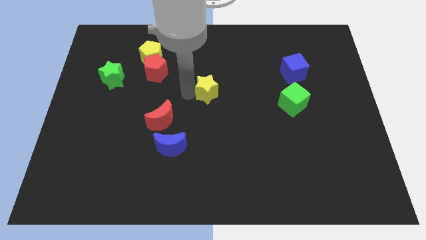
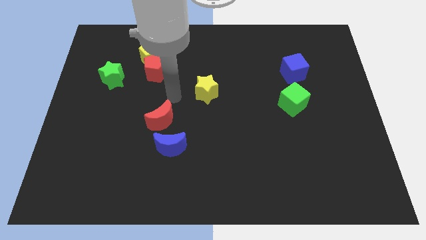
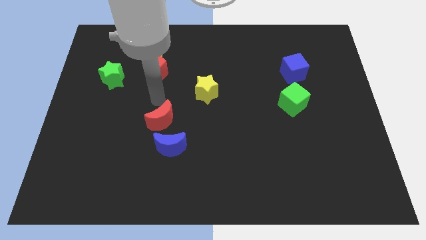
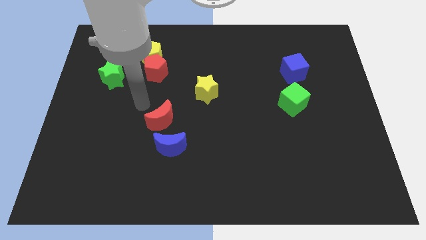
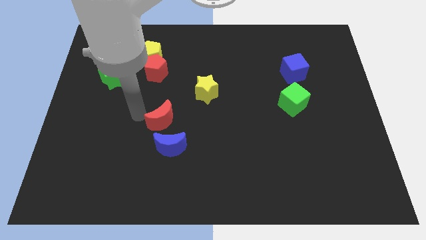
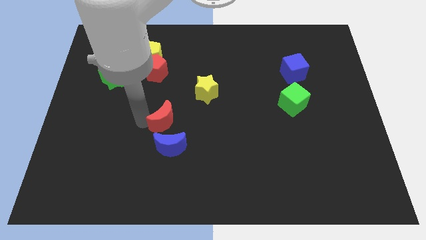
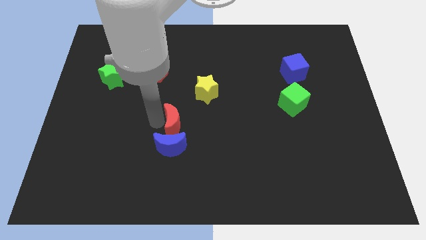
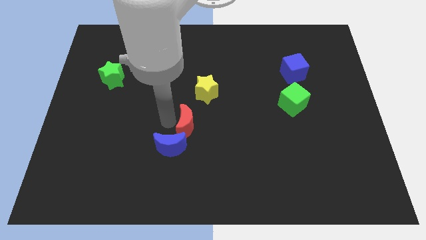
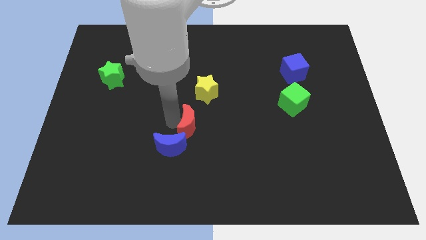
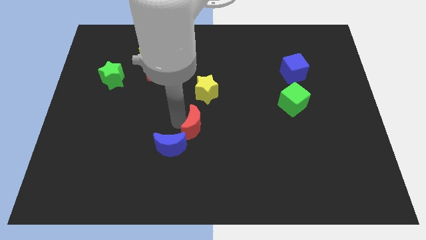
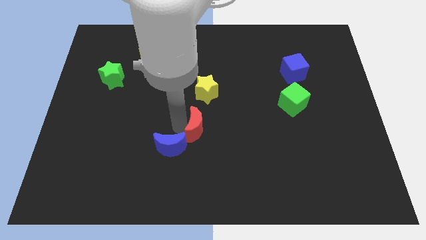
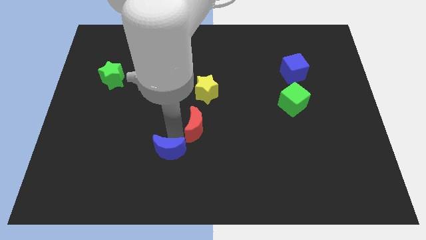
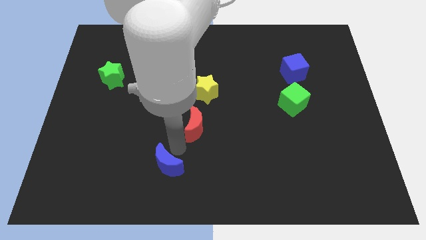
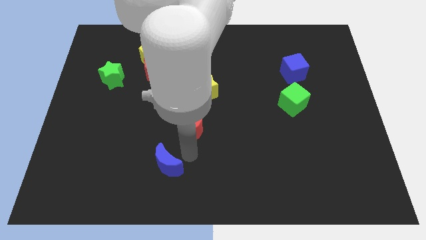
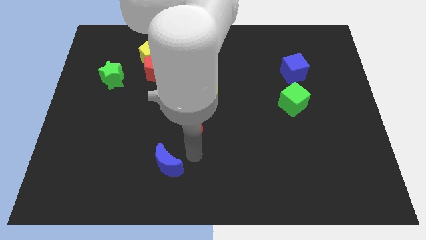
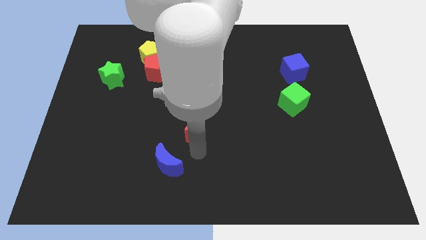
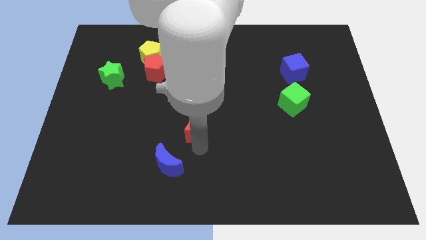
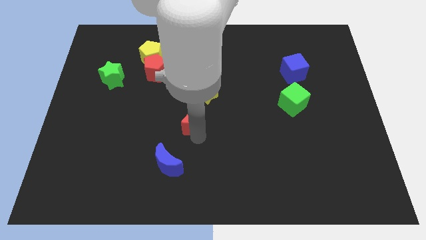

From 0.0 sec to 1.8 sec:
move the blue moon downwards

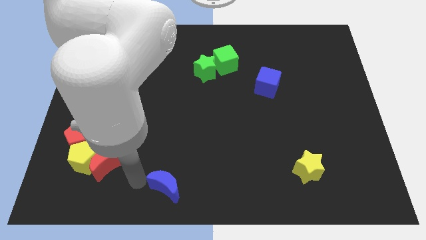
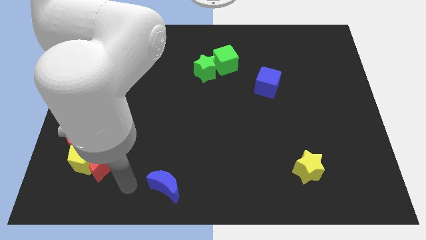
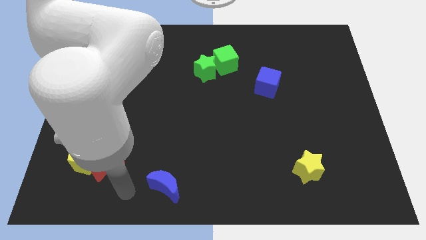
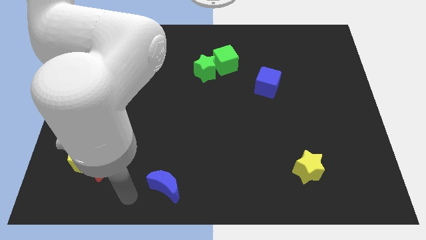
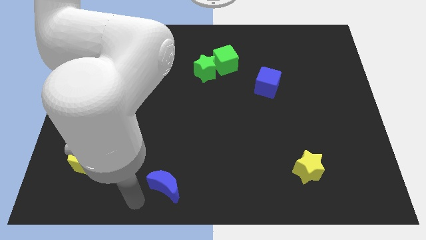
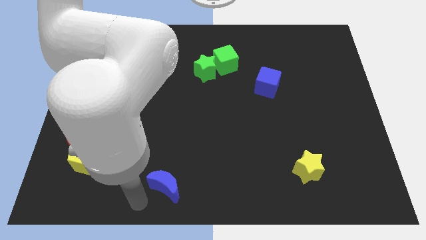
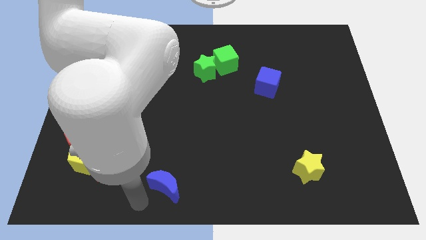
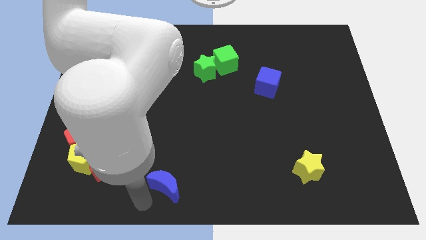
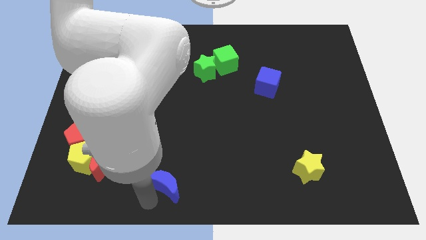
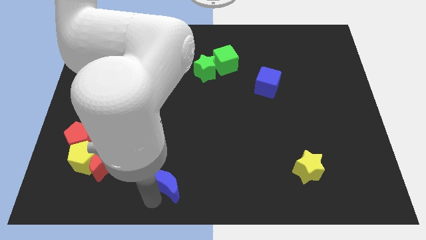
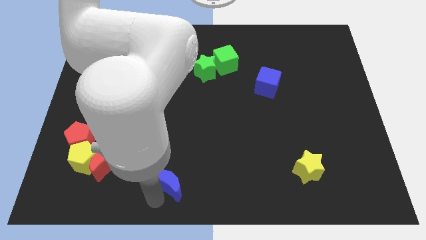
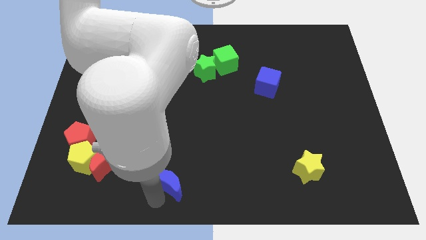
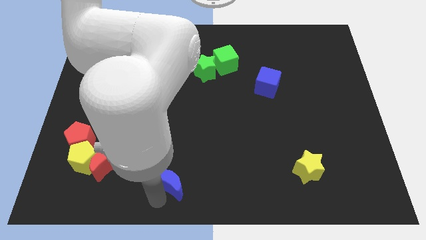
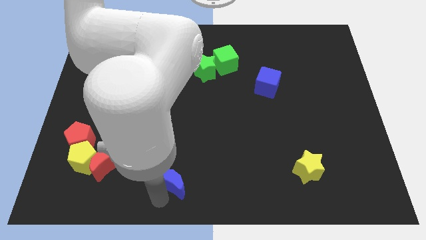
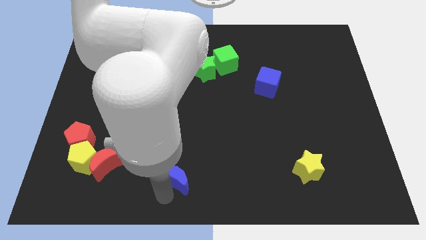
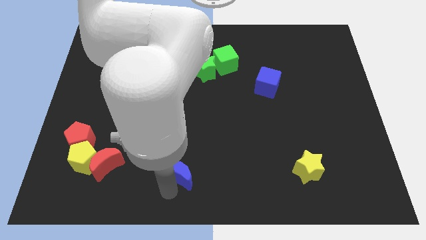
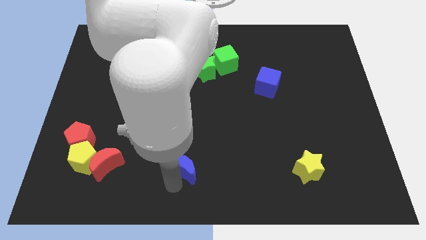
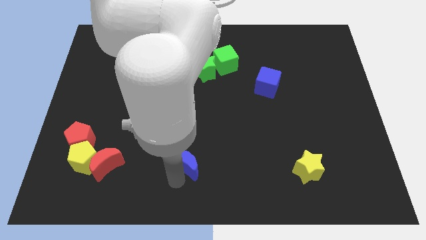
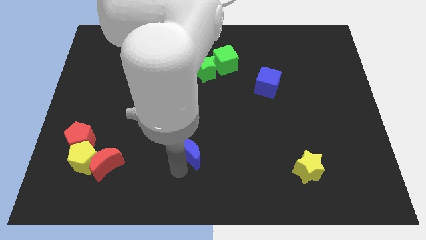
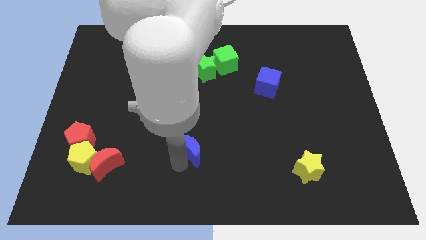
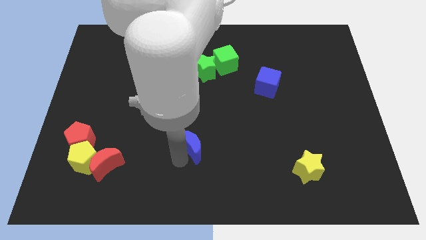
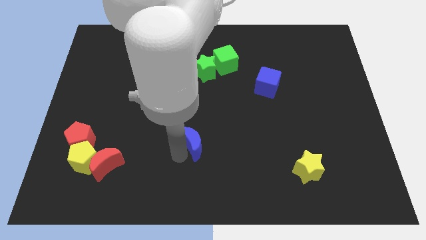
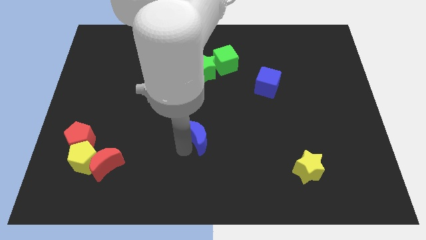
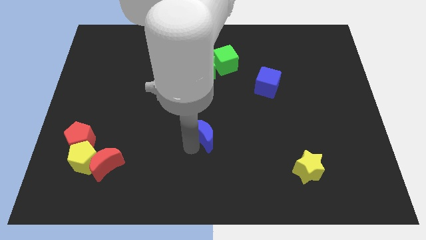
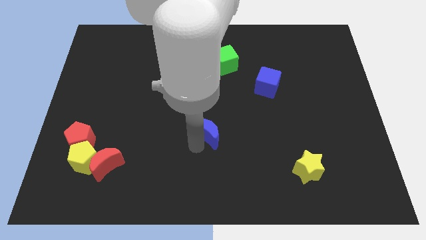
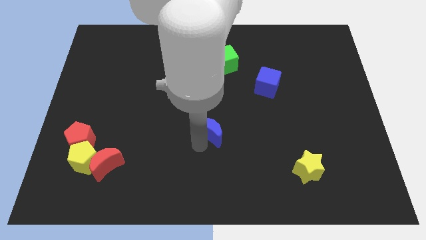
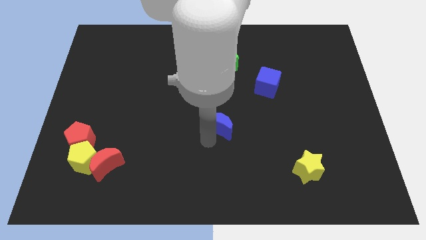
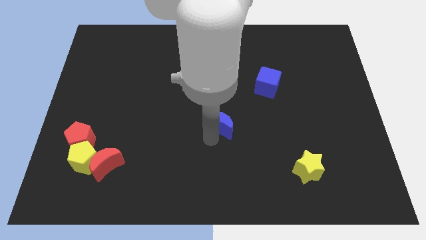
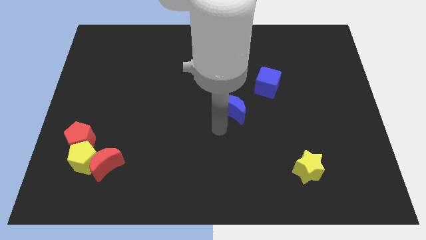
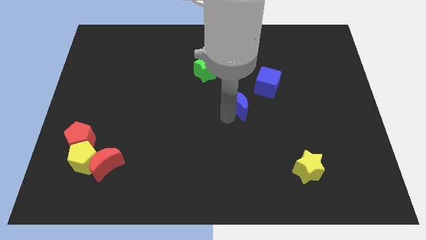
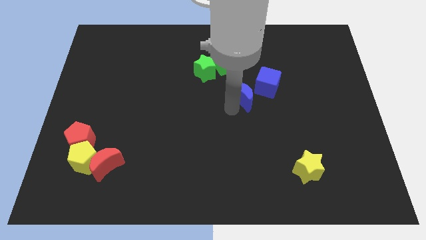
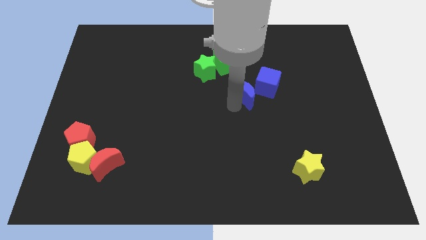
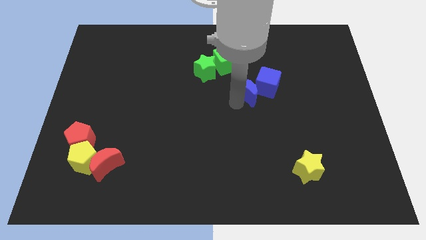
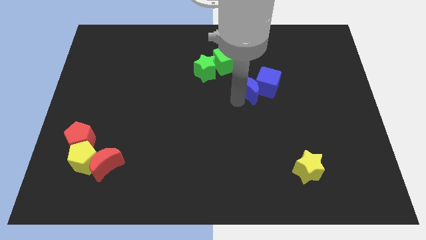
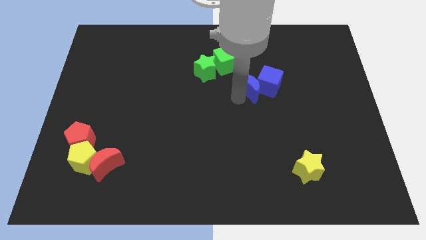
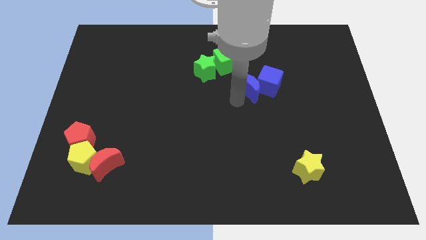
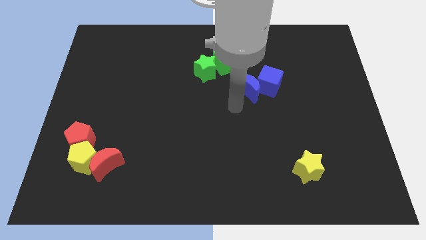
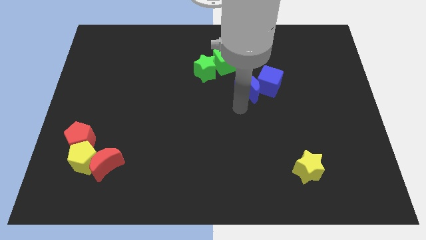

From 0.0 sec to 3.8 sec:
push the blue moon into the blue cube

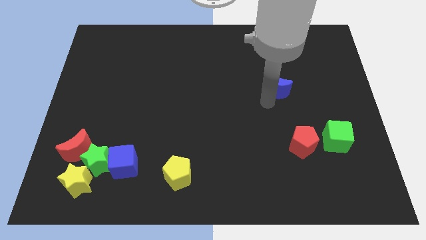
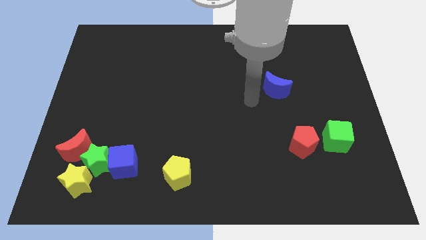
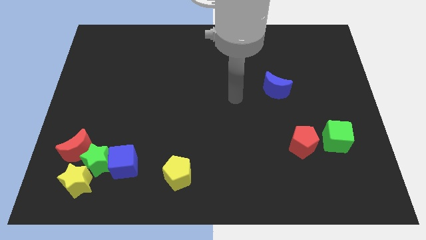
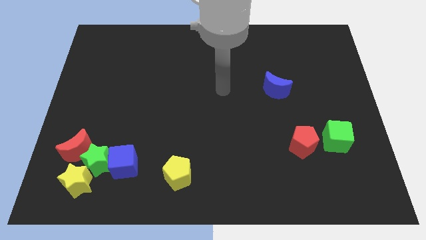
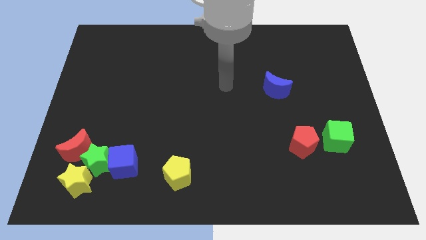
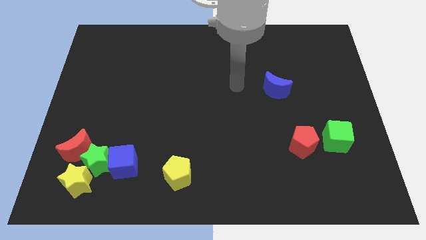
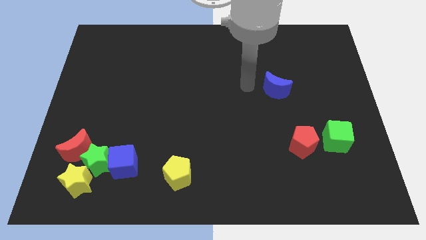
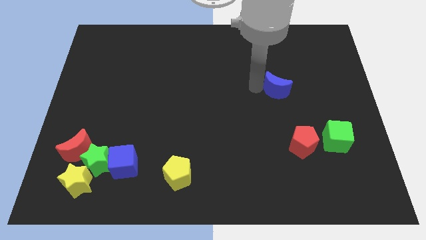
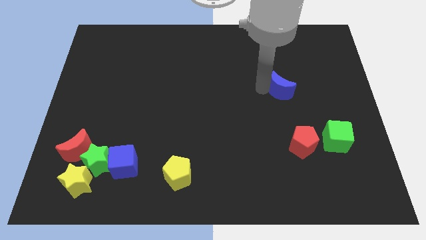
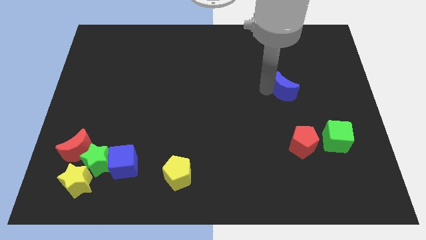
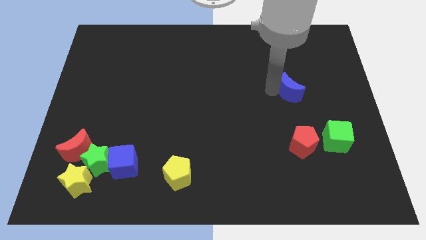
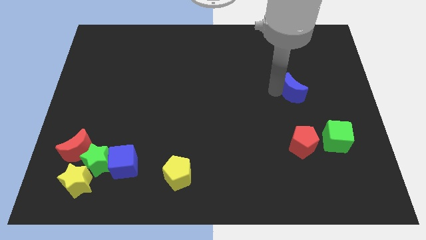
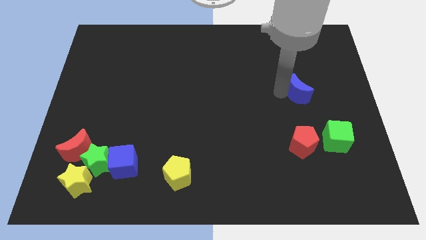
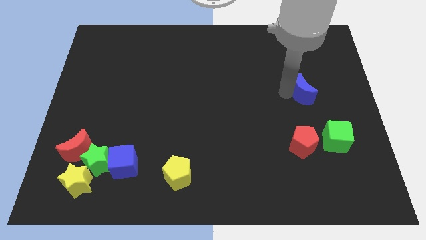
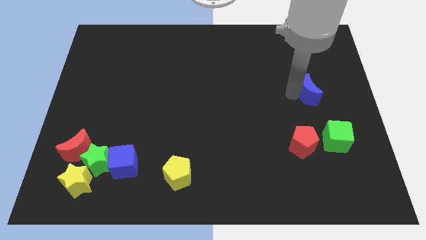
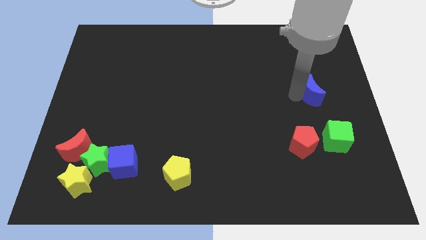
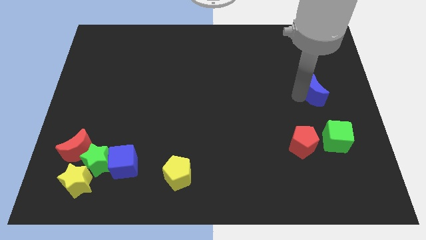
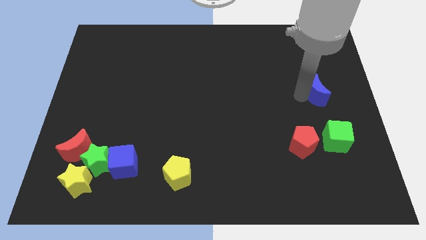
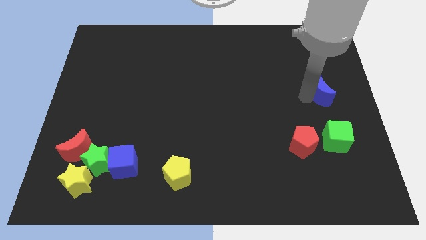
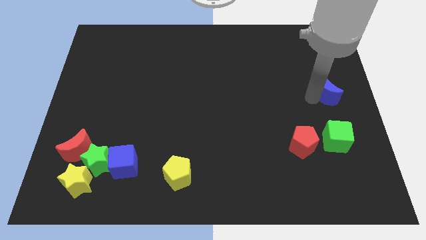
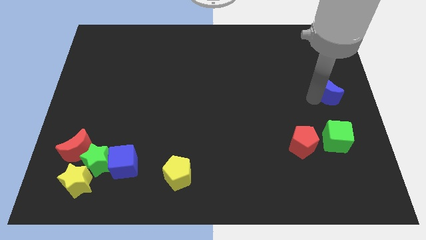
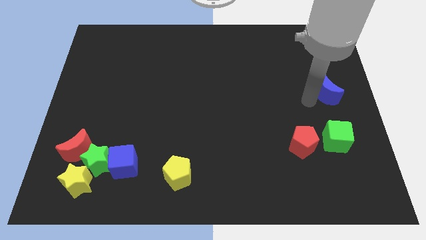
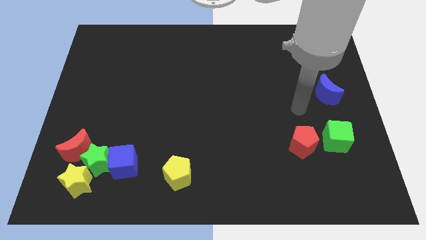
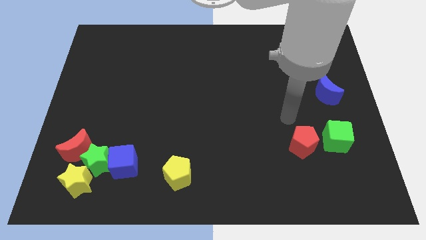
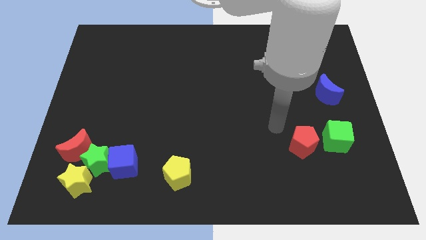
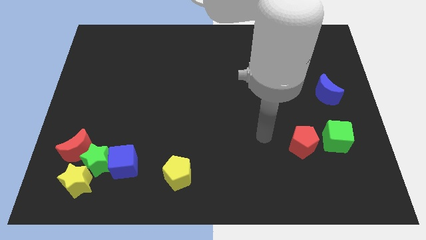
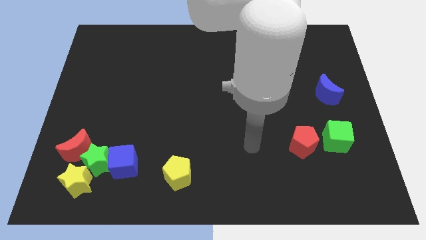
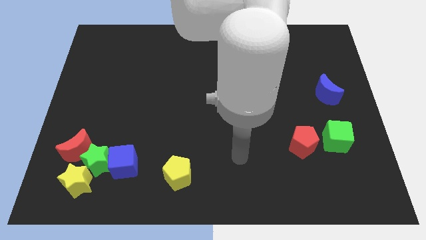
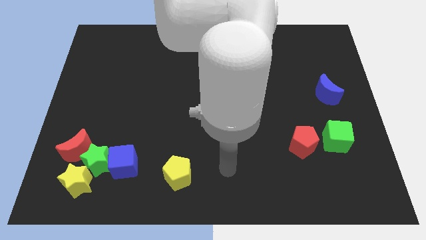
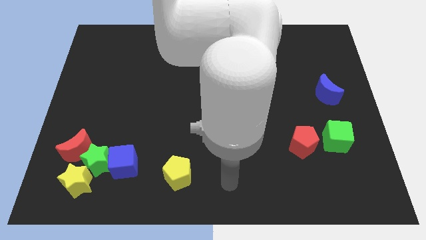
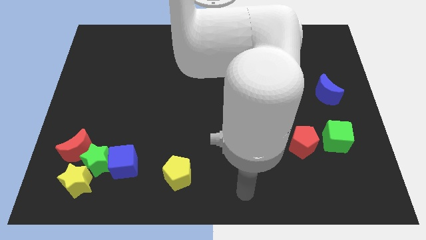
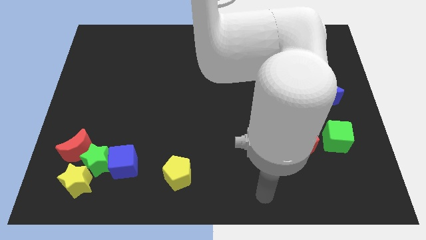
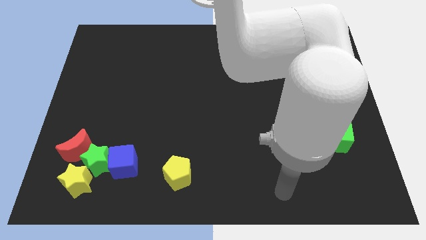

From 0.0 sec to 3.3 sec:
move blue moon above the green cube
